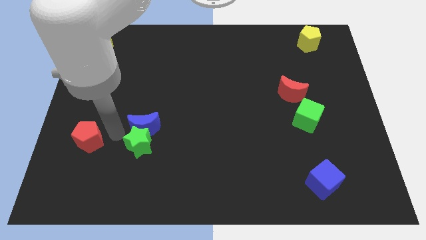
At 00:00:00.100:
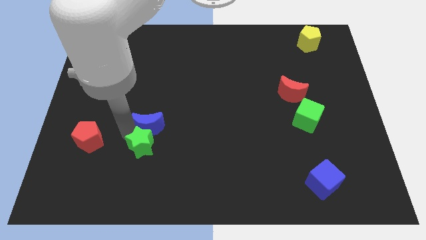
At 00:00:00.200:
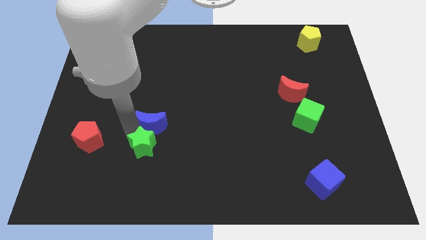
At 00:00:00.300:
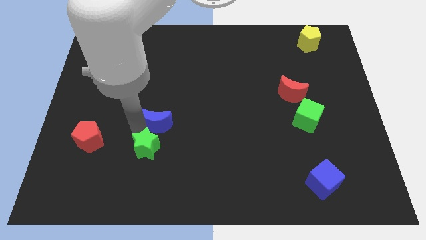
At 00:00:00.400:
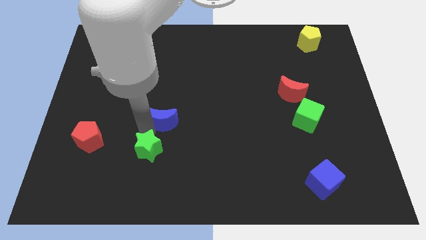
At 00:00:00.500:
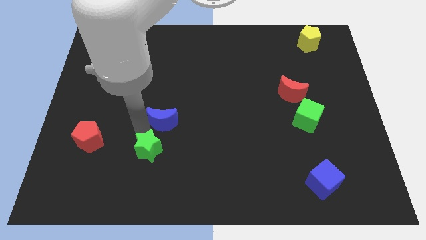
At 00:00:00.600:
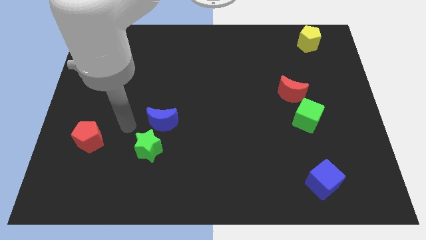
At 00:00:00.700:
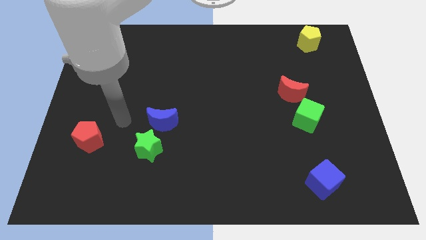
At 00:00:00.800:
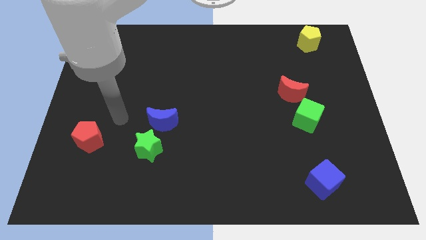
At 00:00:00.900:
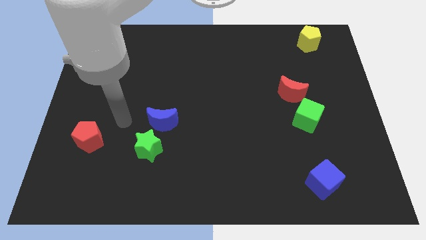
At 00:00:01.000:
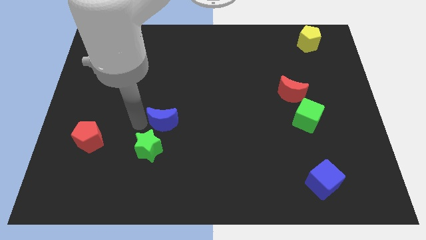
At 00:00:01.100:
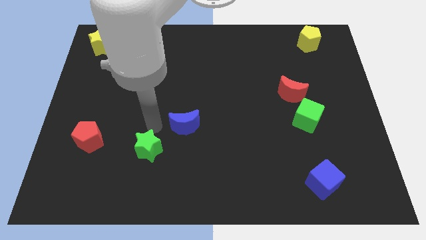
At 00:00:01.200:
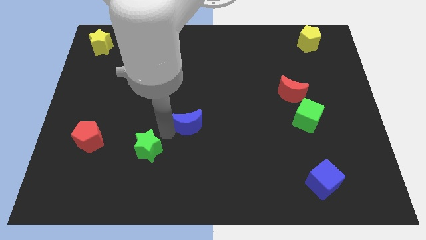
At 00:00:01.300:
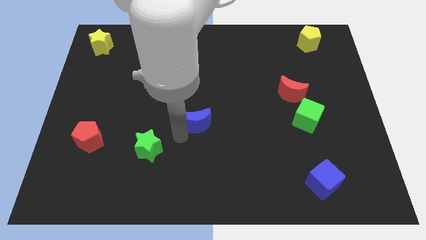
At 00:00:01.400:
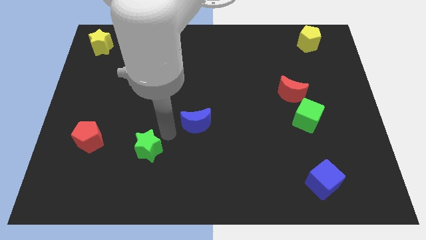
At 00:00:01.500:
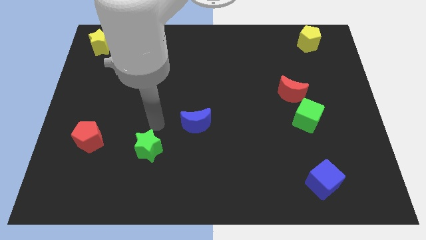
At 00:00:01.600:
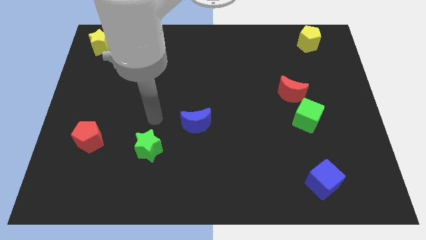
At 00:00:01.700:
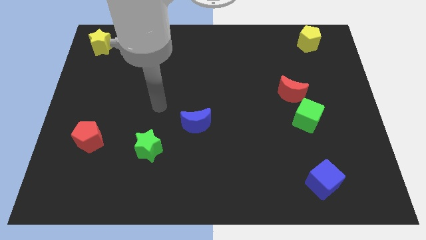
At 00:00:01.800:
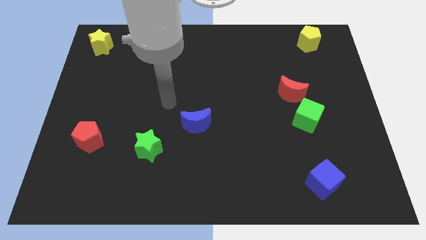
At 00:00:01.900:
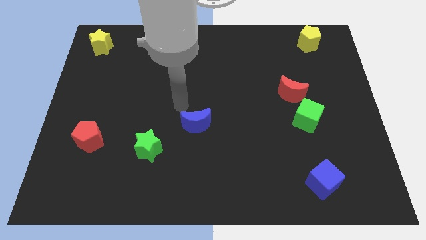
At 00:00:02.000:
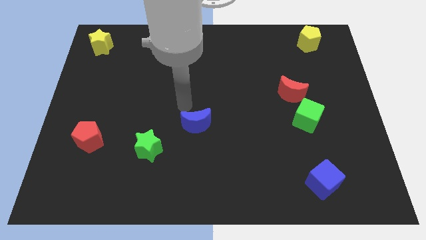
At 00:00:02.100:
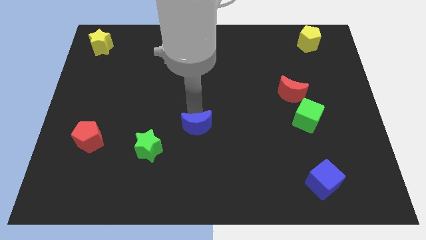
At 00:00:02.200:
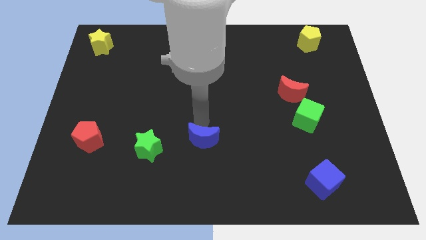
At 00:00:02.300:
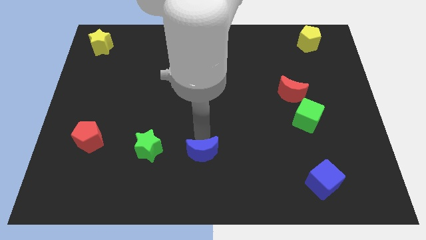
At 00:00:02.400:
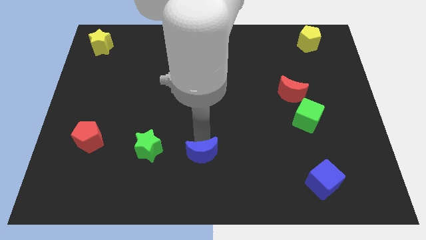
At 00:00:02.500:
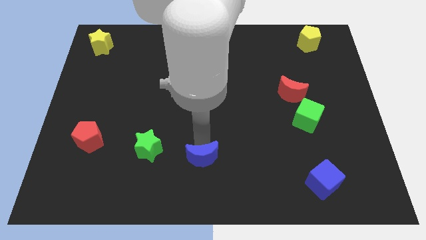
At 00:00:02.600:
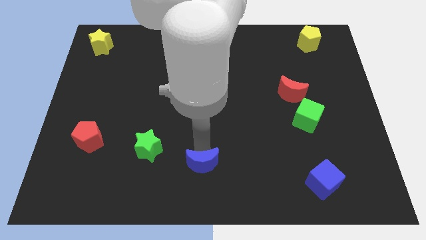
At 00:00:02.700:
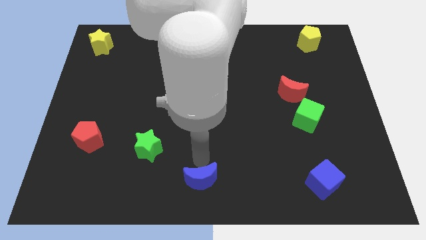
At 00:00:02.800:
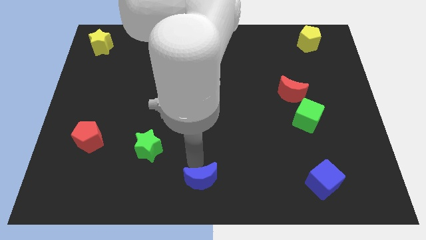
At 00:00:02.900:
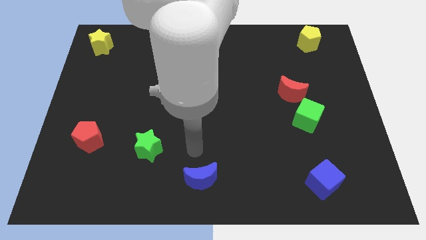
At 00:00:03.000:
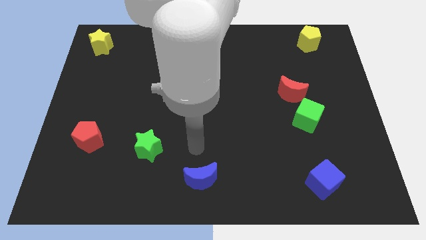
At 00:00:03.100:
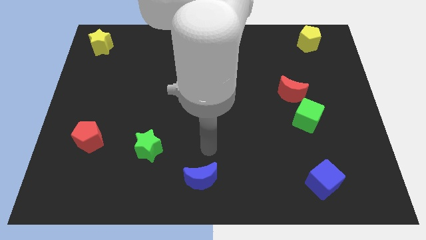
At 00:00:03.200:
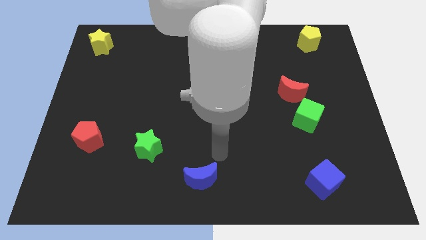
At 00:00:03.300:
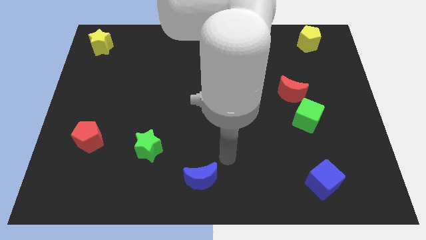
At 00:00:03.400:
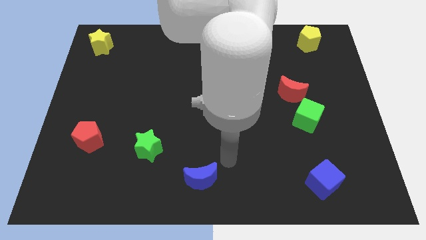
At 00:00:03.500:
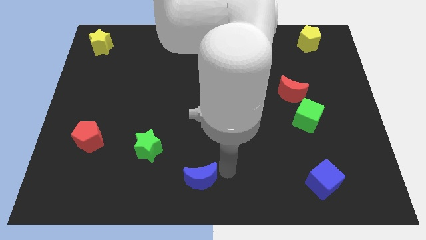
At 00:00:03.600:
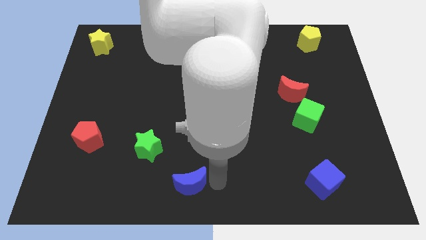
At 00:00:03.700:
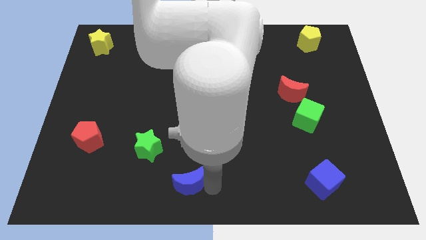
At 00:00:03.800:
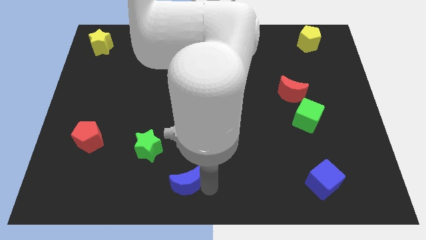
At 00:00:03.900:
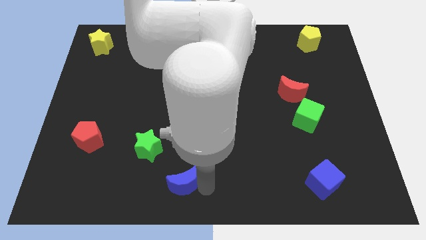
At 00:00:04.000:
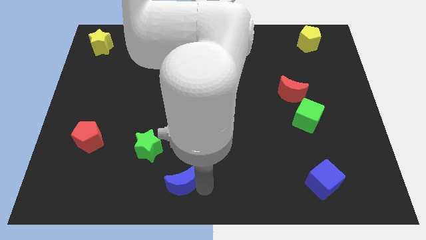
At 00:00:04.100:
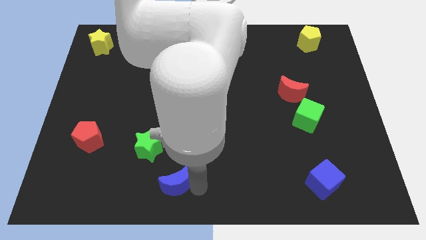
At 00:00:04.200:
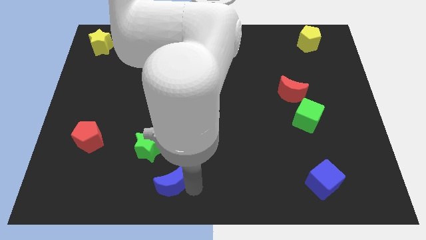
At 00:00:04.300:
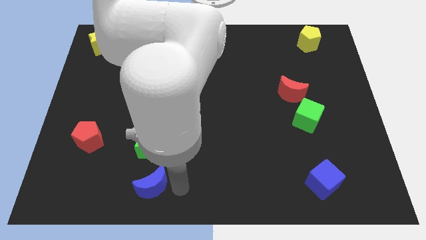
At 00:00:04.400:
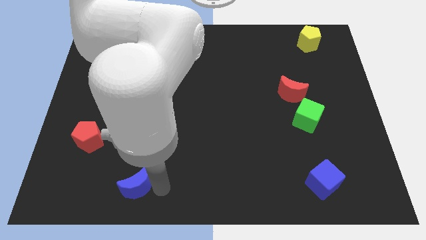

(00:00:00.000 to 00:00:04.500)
push the blue crescent away from the green star

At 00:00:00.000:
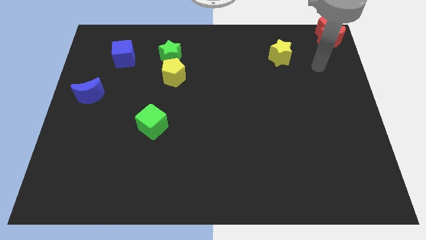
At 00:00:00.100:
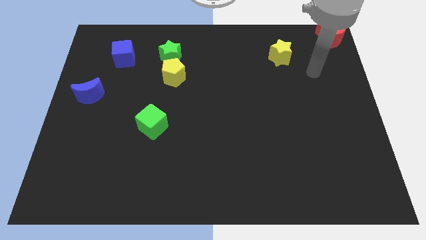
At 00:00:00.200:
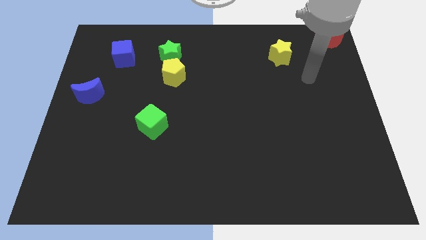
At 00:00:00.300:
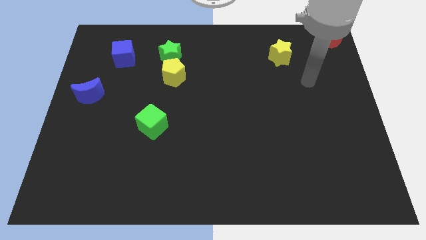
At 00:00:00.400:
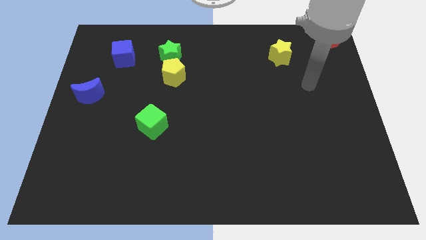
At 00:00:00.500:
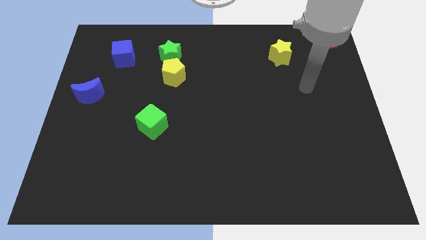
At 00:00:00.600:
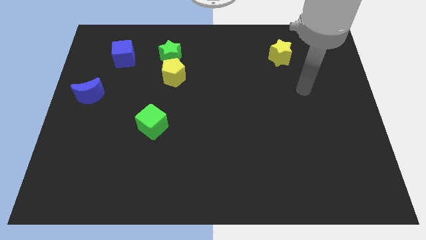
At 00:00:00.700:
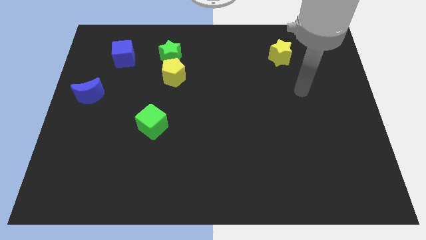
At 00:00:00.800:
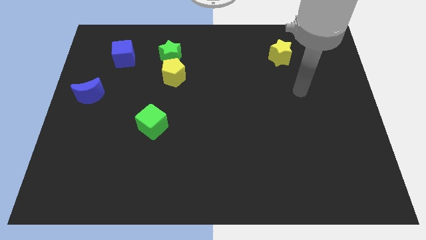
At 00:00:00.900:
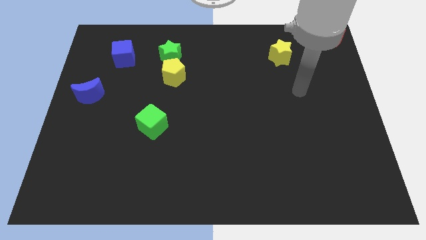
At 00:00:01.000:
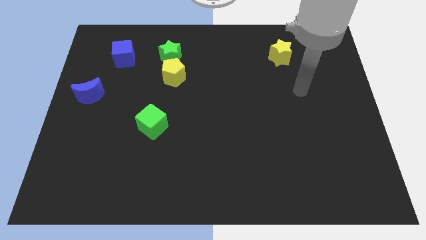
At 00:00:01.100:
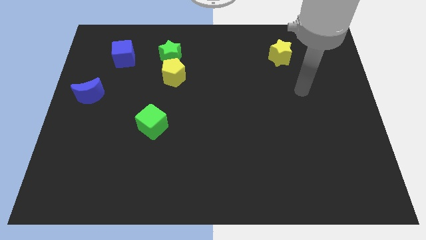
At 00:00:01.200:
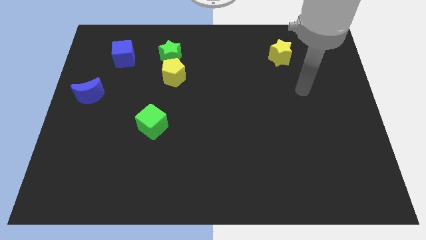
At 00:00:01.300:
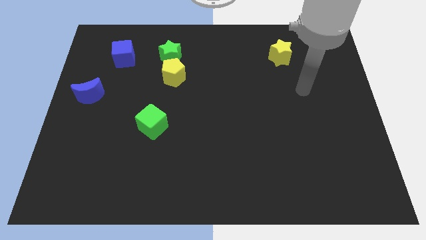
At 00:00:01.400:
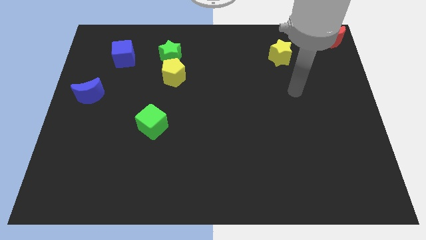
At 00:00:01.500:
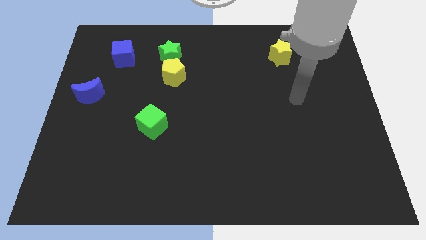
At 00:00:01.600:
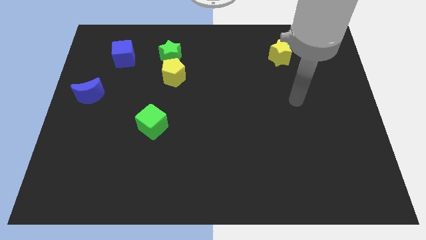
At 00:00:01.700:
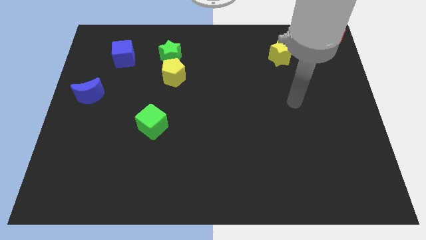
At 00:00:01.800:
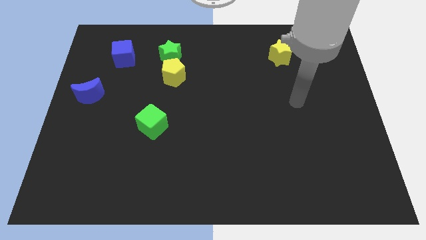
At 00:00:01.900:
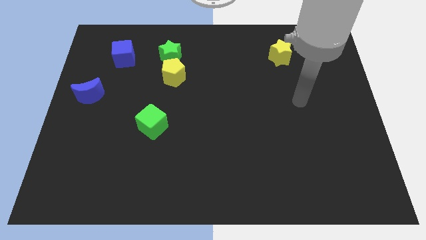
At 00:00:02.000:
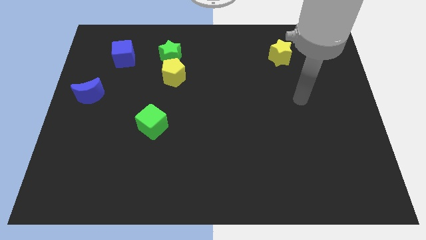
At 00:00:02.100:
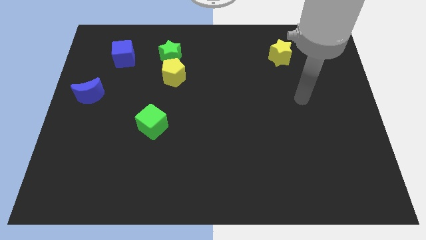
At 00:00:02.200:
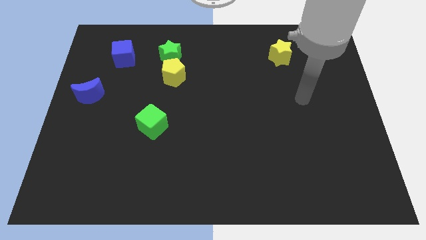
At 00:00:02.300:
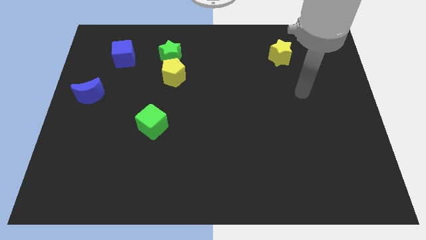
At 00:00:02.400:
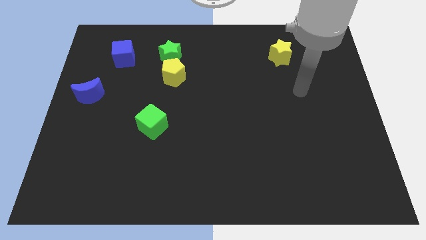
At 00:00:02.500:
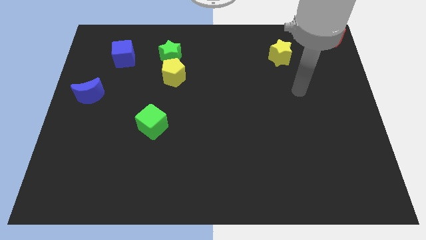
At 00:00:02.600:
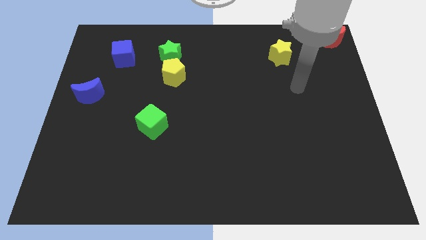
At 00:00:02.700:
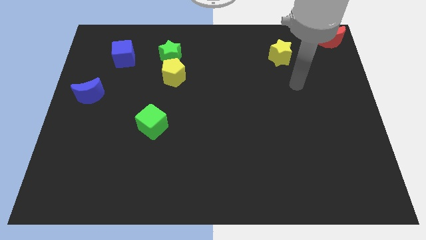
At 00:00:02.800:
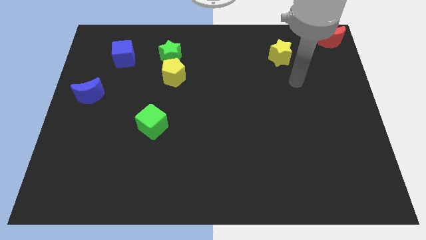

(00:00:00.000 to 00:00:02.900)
move your arm slightly down

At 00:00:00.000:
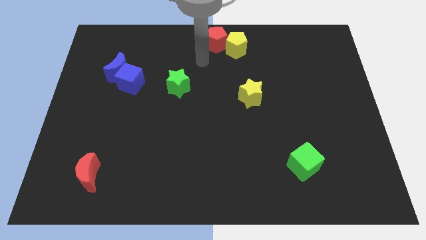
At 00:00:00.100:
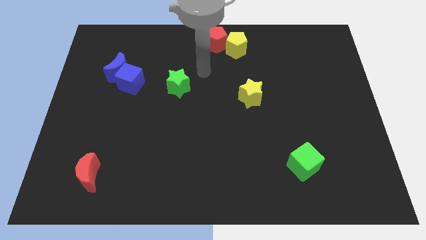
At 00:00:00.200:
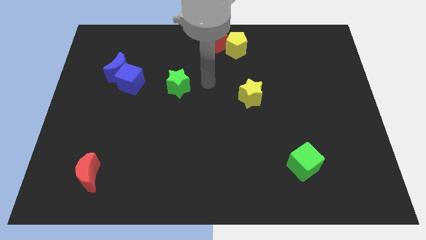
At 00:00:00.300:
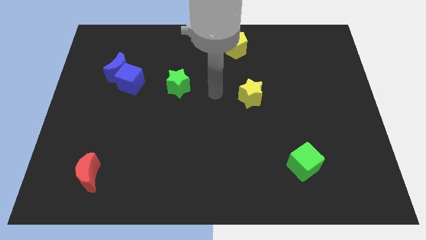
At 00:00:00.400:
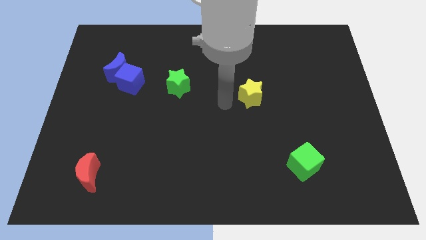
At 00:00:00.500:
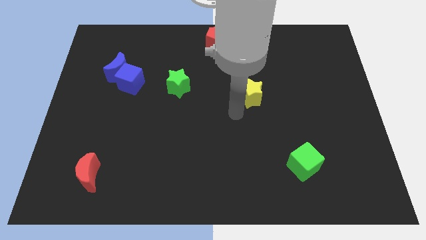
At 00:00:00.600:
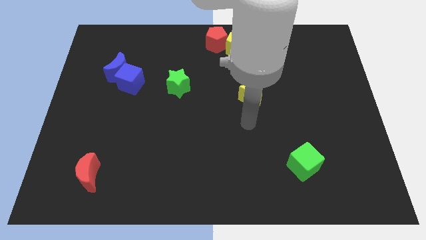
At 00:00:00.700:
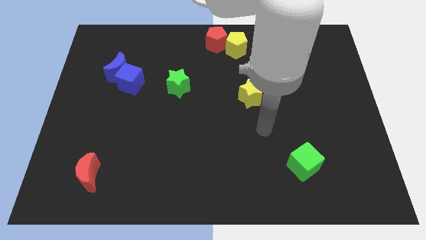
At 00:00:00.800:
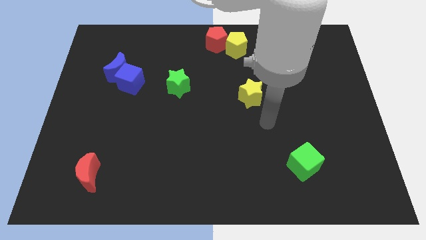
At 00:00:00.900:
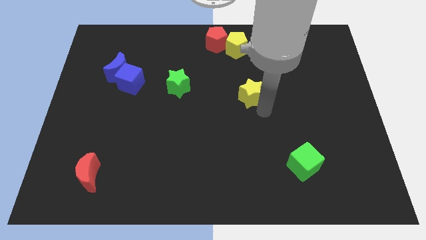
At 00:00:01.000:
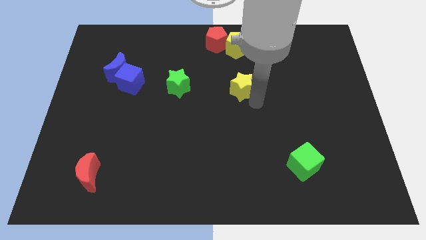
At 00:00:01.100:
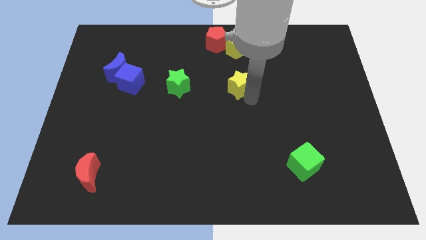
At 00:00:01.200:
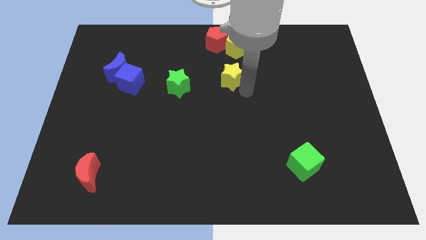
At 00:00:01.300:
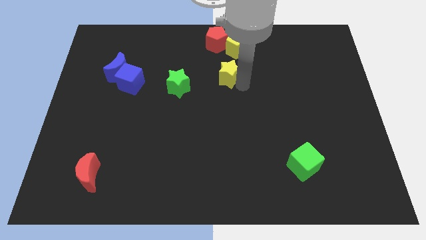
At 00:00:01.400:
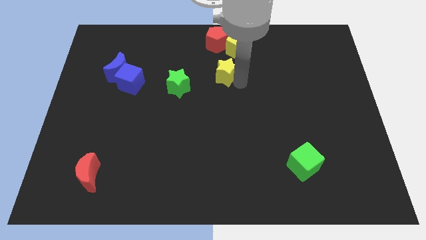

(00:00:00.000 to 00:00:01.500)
push the yellow diagonal to the right of the green star
